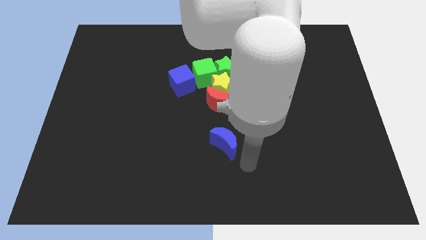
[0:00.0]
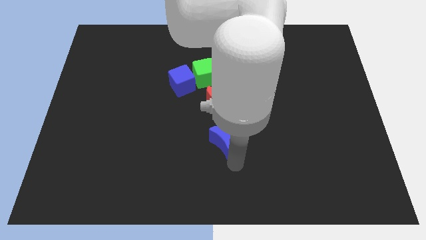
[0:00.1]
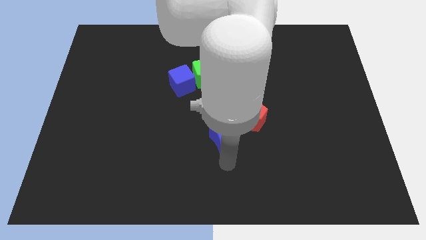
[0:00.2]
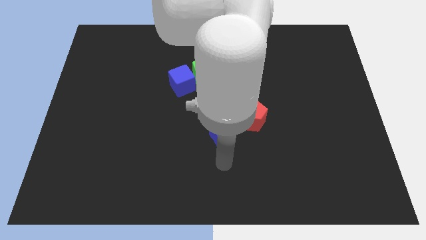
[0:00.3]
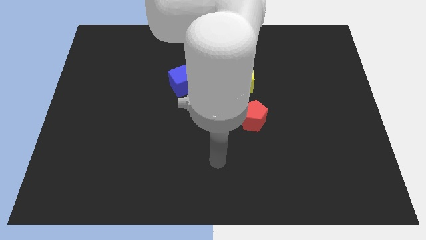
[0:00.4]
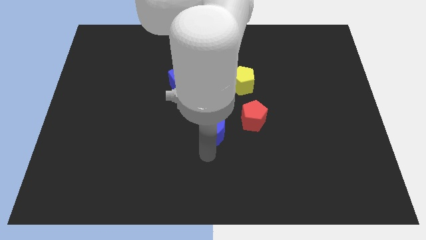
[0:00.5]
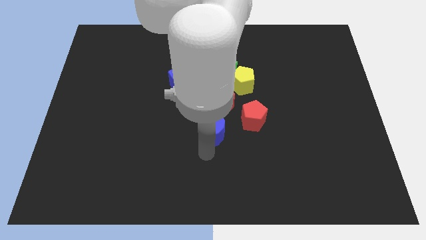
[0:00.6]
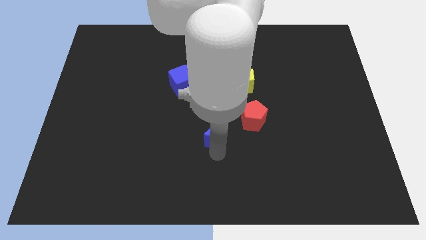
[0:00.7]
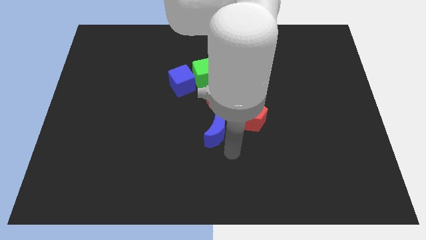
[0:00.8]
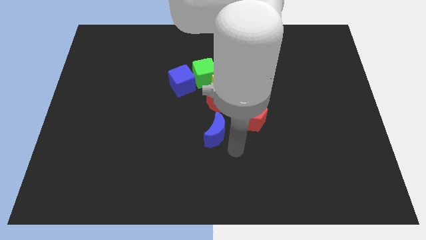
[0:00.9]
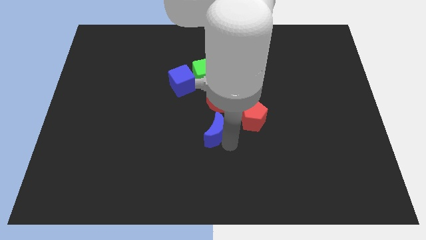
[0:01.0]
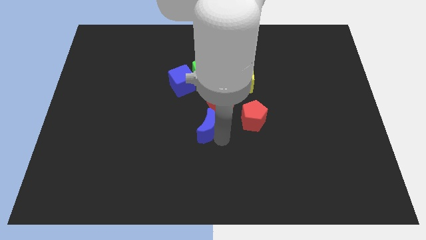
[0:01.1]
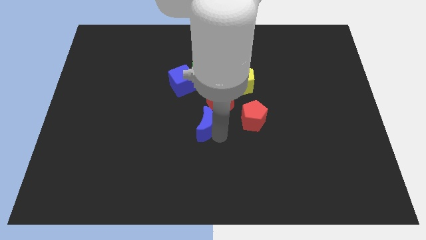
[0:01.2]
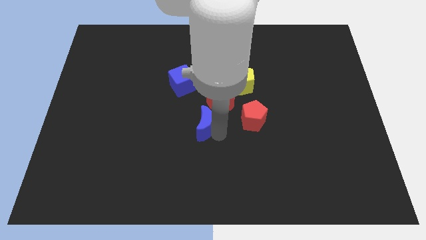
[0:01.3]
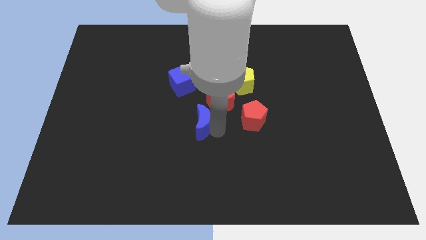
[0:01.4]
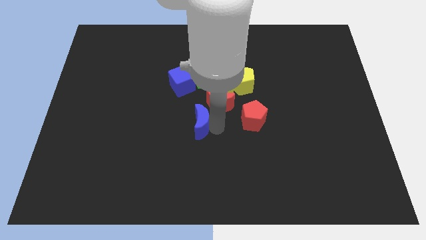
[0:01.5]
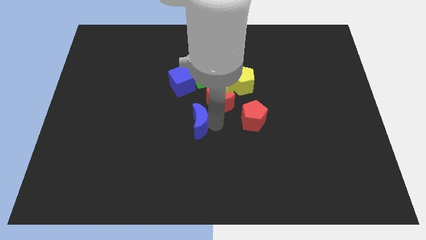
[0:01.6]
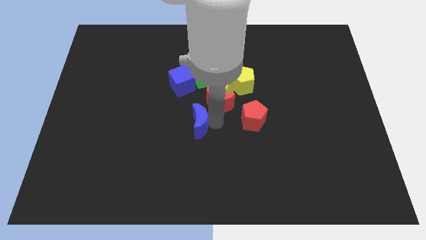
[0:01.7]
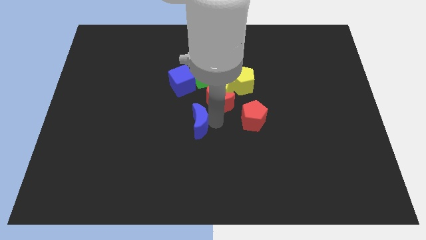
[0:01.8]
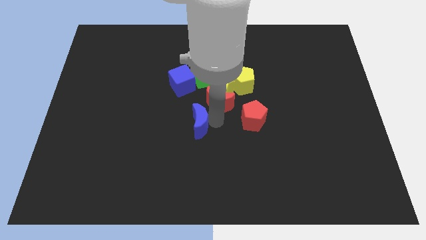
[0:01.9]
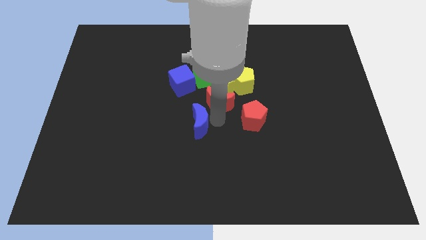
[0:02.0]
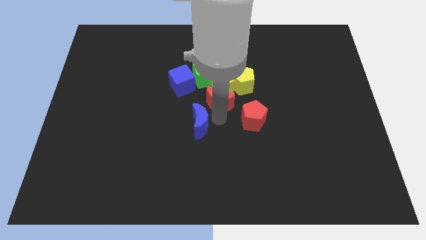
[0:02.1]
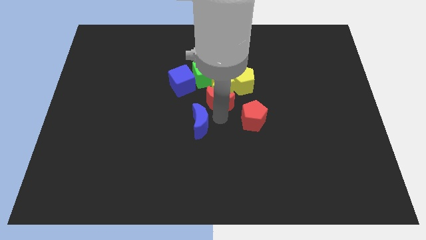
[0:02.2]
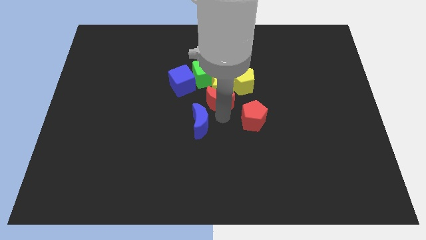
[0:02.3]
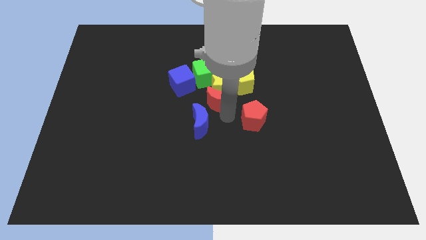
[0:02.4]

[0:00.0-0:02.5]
place the blue moon towards the bottom left side of the red crescent

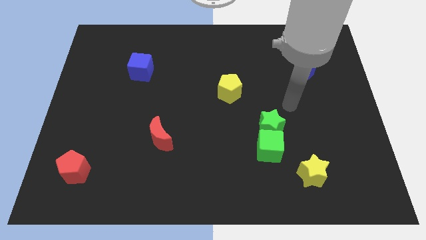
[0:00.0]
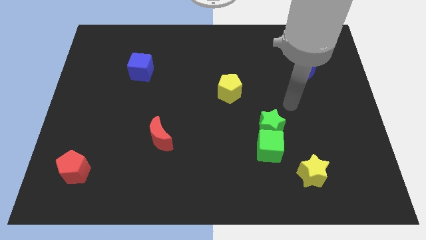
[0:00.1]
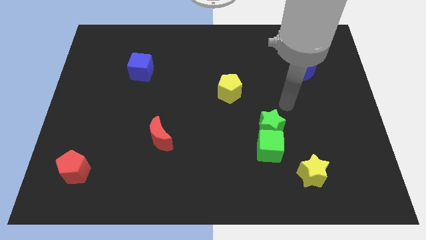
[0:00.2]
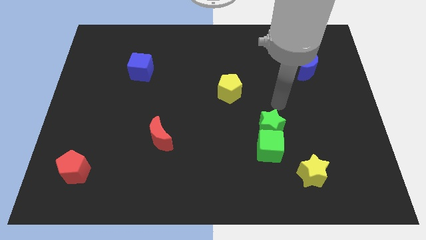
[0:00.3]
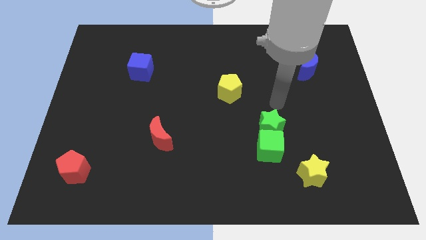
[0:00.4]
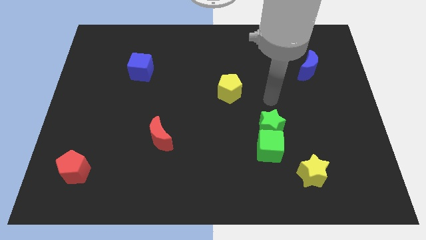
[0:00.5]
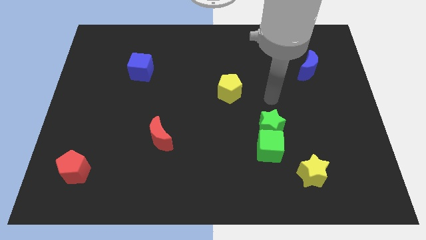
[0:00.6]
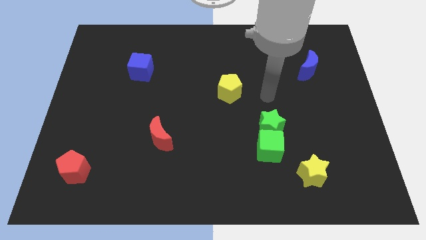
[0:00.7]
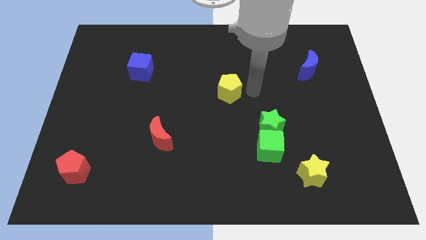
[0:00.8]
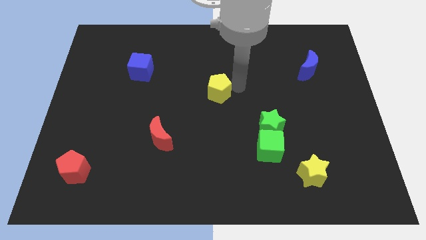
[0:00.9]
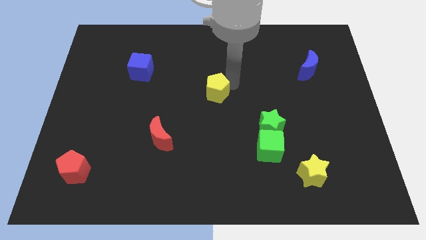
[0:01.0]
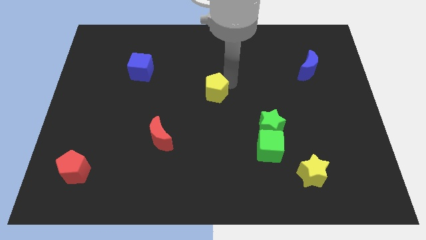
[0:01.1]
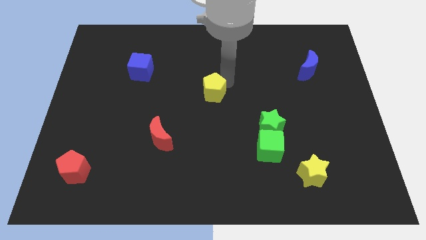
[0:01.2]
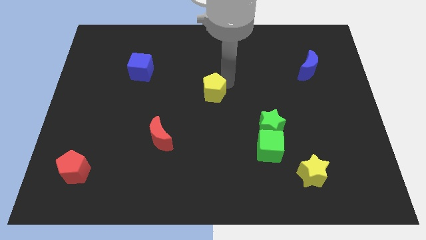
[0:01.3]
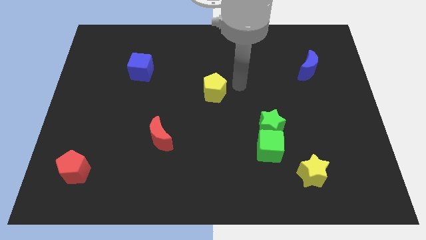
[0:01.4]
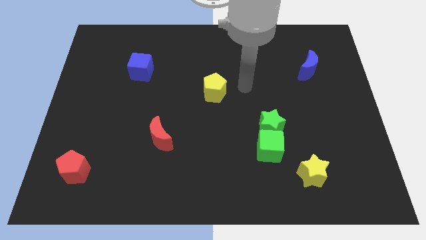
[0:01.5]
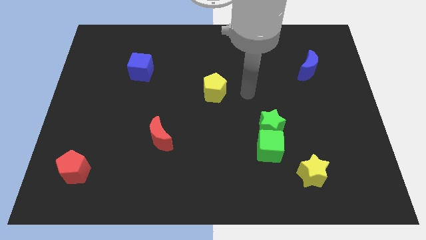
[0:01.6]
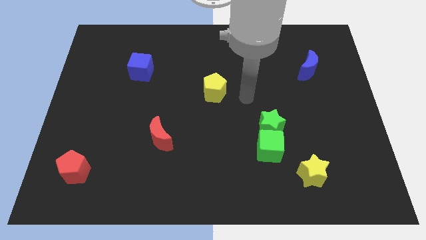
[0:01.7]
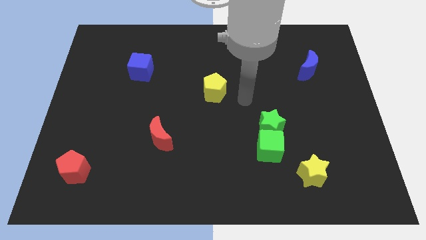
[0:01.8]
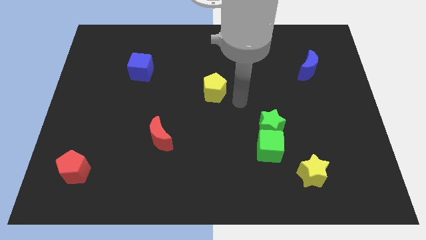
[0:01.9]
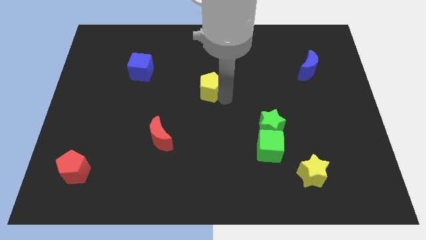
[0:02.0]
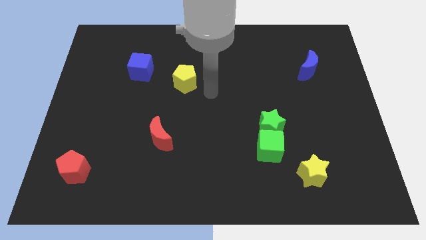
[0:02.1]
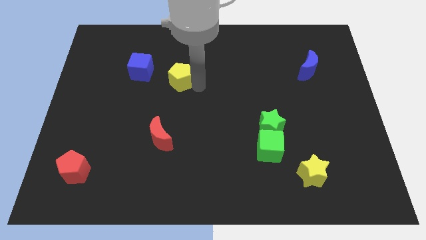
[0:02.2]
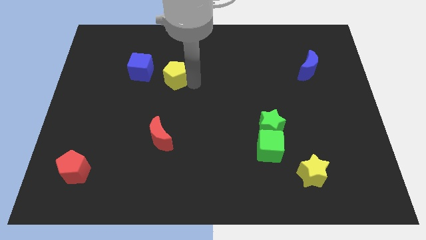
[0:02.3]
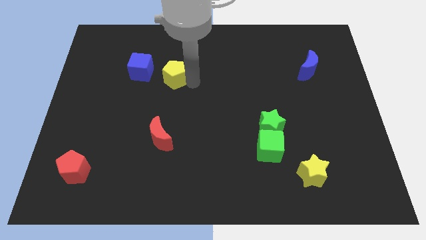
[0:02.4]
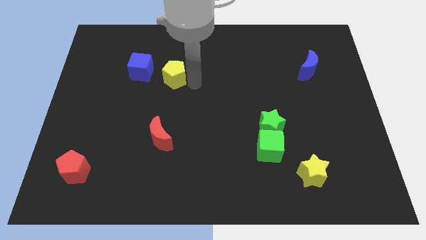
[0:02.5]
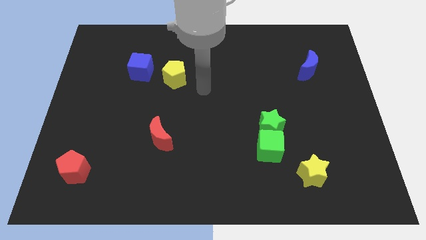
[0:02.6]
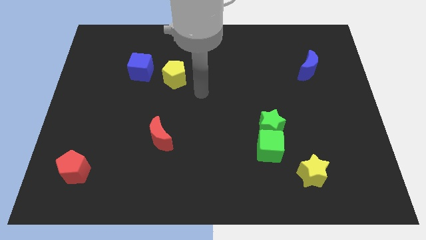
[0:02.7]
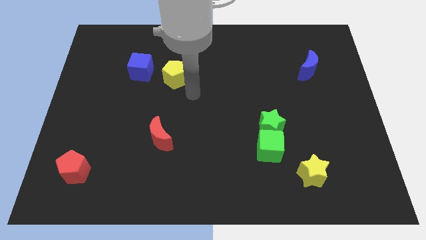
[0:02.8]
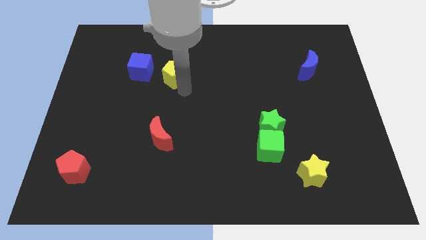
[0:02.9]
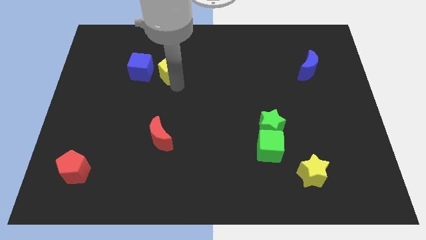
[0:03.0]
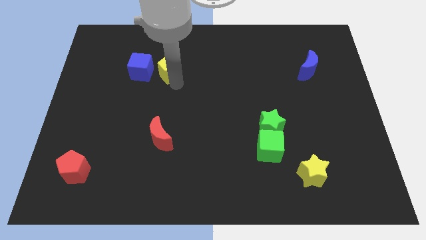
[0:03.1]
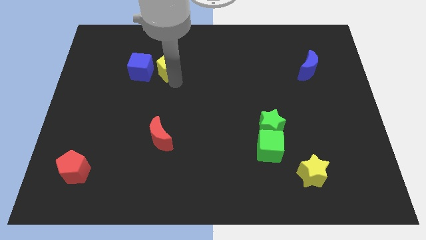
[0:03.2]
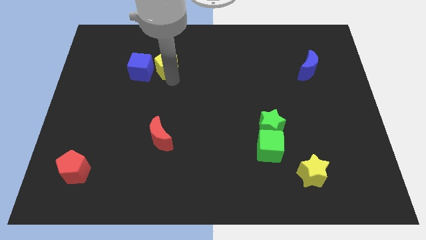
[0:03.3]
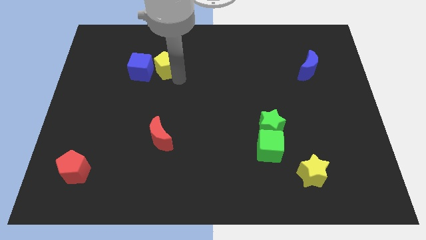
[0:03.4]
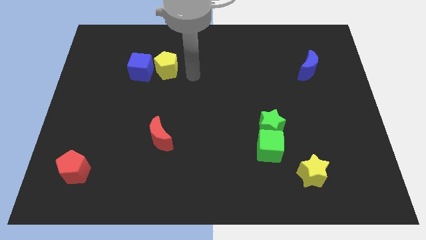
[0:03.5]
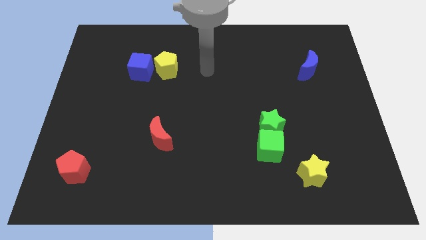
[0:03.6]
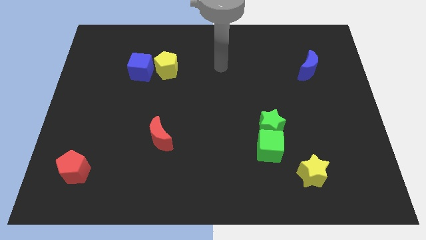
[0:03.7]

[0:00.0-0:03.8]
move the yellow pentagon to the right side of the blue cube

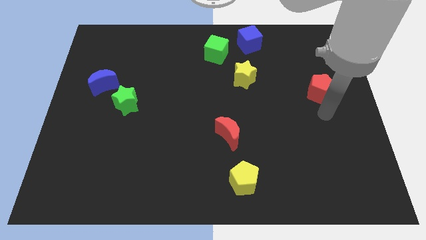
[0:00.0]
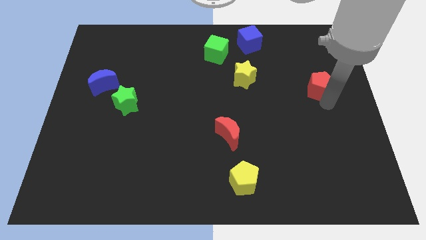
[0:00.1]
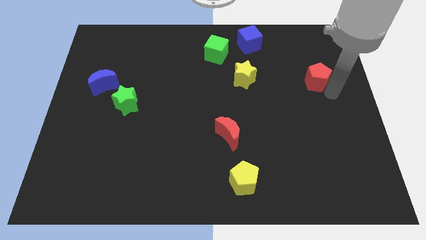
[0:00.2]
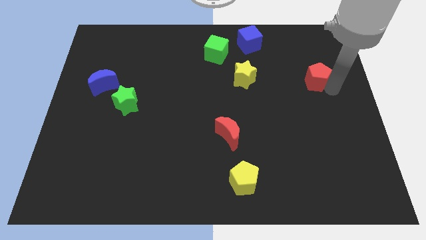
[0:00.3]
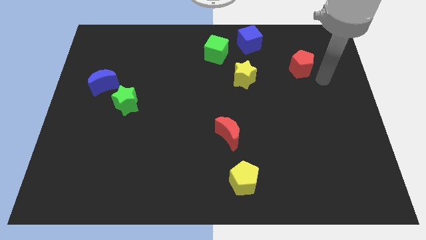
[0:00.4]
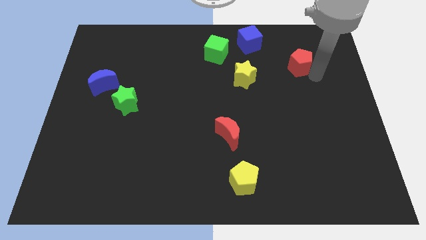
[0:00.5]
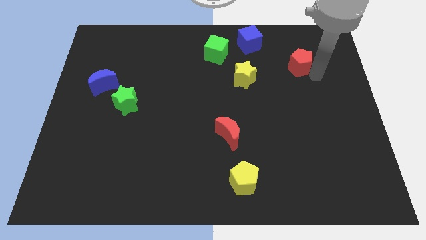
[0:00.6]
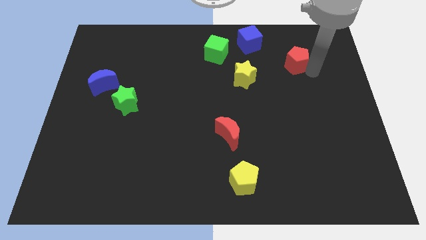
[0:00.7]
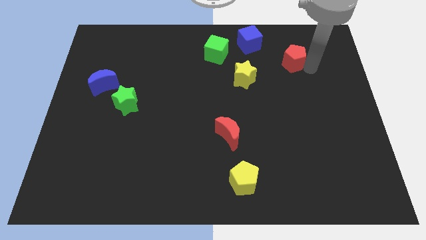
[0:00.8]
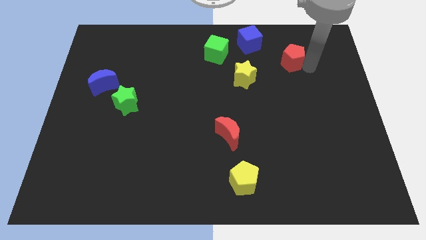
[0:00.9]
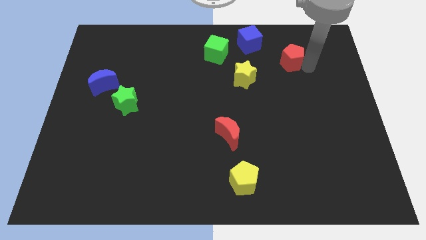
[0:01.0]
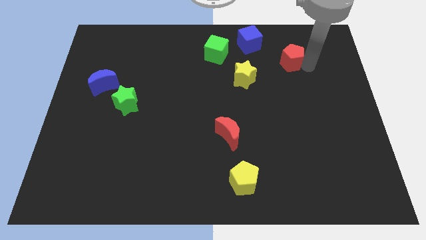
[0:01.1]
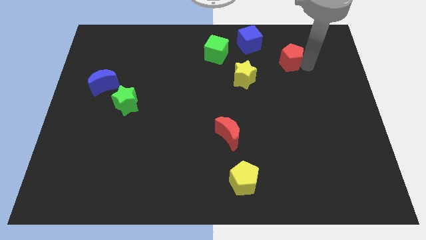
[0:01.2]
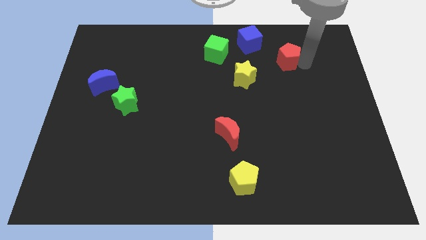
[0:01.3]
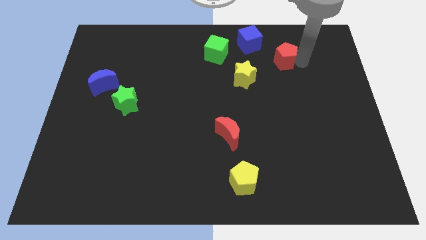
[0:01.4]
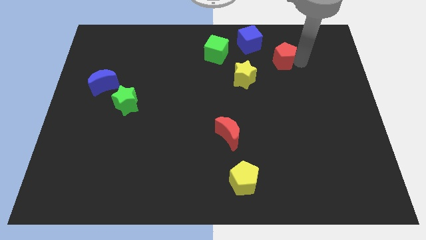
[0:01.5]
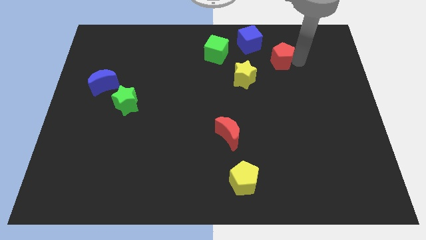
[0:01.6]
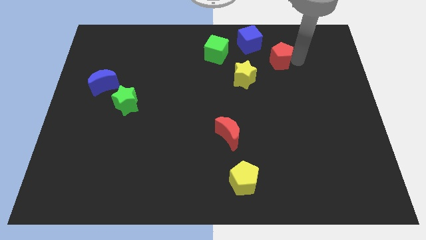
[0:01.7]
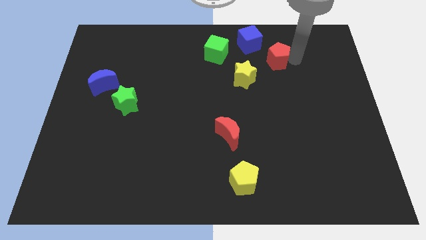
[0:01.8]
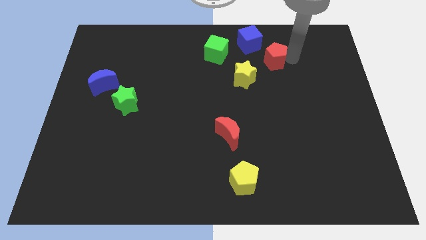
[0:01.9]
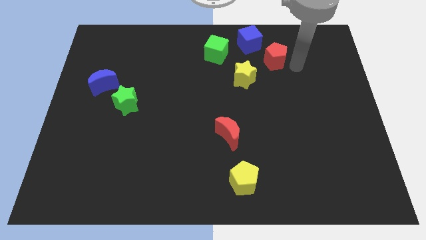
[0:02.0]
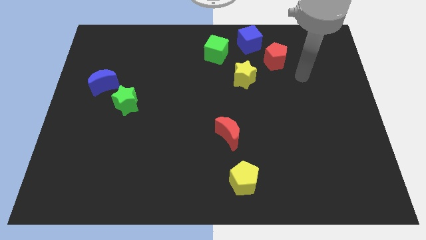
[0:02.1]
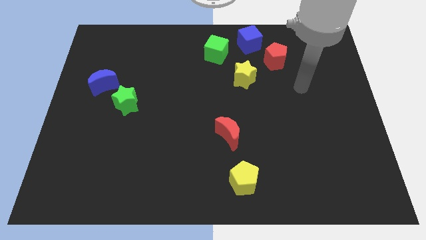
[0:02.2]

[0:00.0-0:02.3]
move the red pentagon to the horizontal right of the green cube

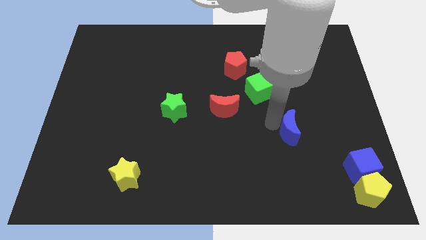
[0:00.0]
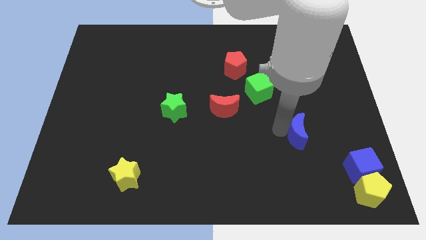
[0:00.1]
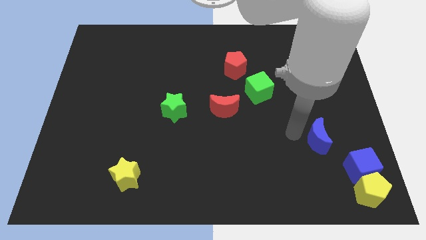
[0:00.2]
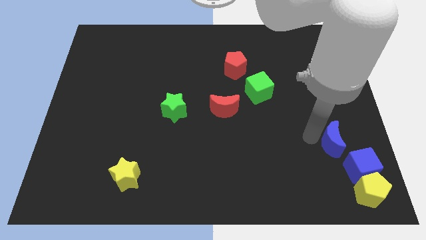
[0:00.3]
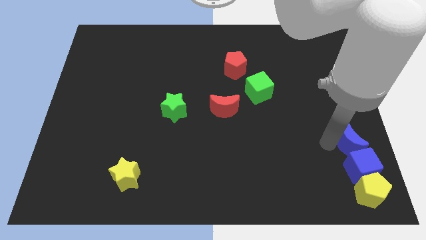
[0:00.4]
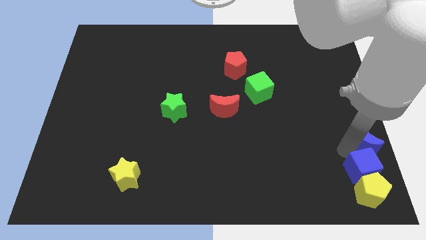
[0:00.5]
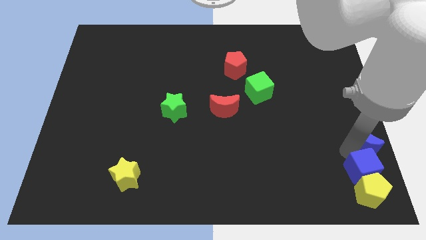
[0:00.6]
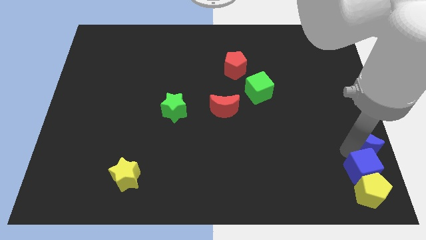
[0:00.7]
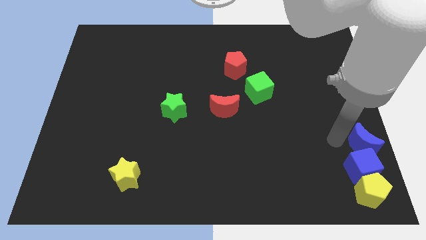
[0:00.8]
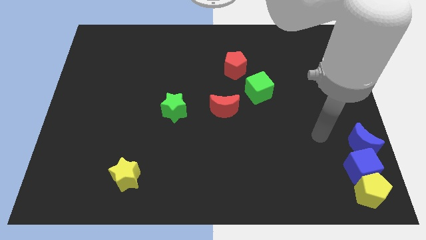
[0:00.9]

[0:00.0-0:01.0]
move the blue moon above the blue cube
